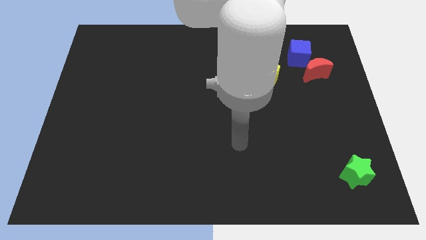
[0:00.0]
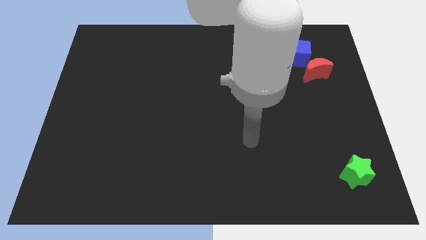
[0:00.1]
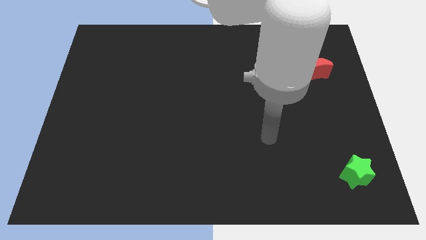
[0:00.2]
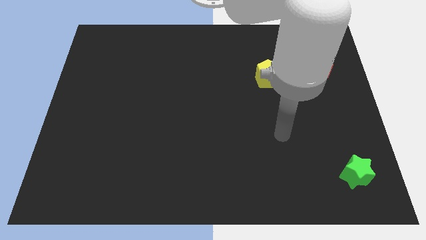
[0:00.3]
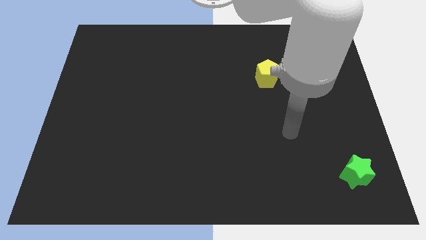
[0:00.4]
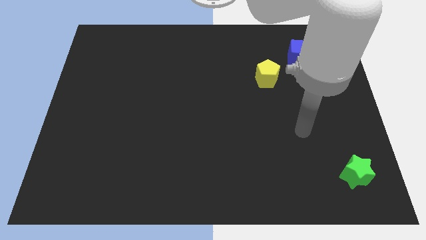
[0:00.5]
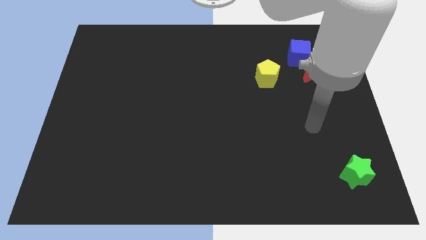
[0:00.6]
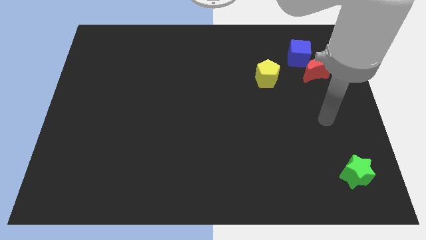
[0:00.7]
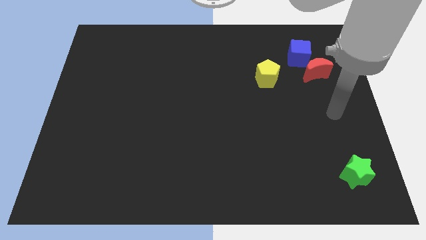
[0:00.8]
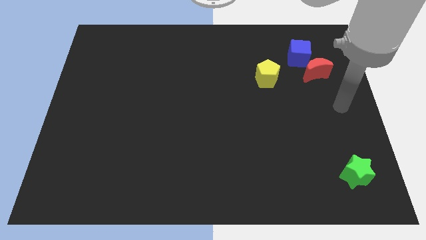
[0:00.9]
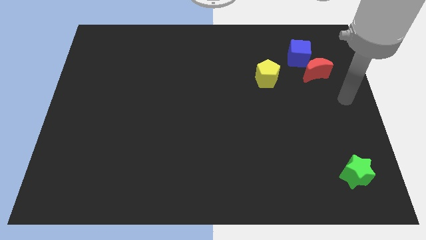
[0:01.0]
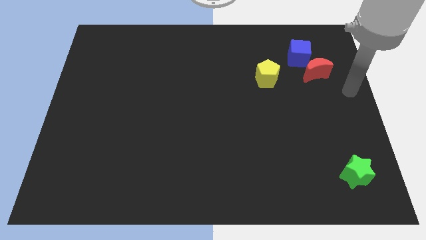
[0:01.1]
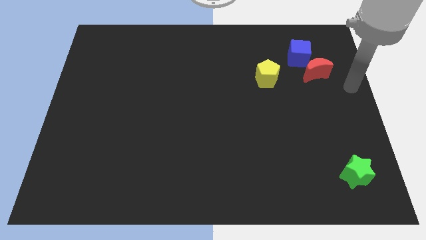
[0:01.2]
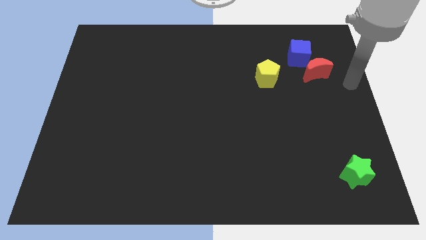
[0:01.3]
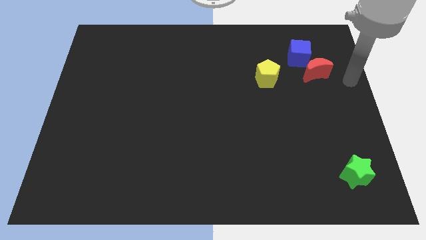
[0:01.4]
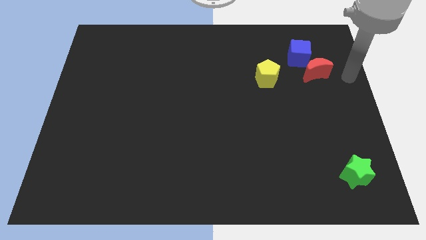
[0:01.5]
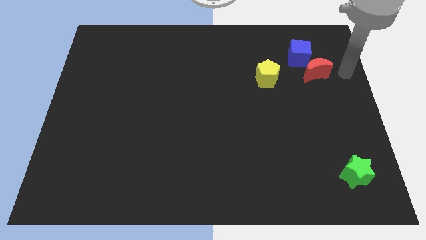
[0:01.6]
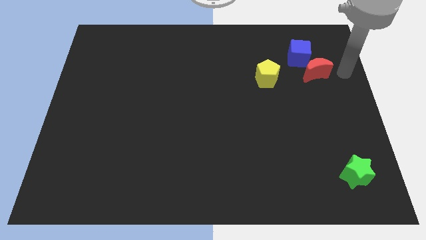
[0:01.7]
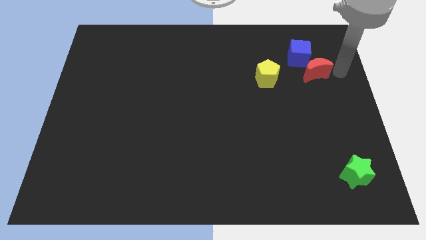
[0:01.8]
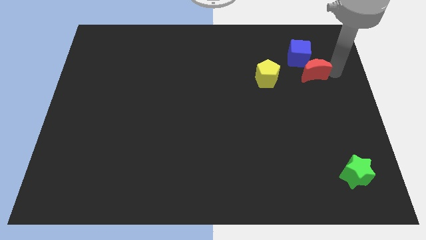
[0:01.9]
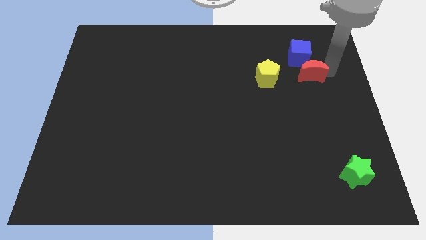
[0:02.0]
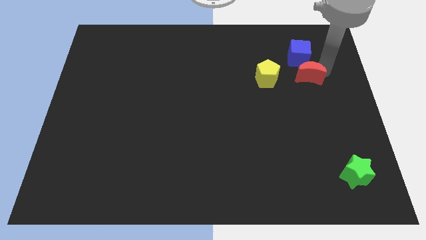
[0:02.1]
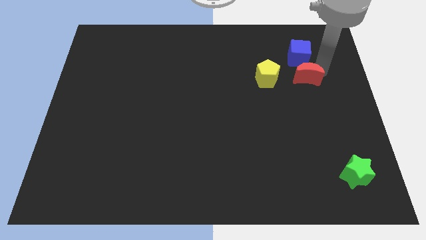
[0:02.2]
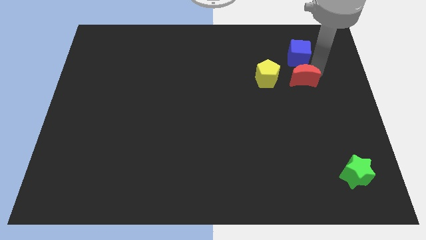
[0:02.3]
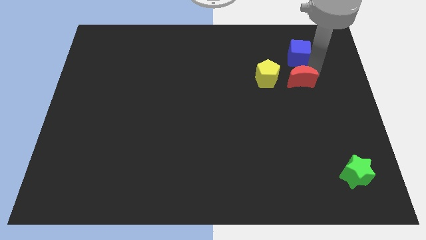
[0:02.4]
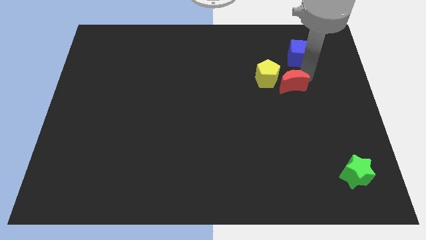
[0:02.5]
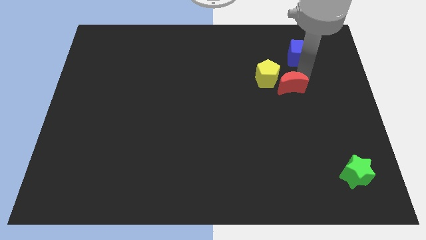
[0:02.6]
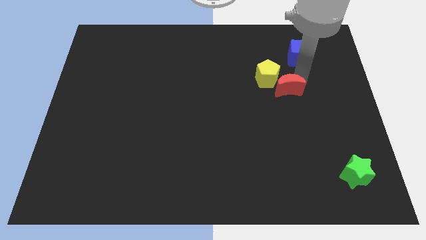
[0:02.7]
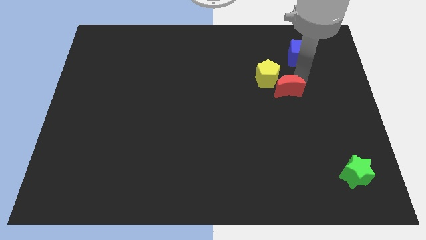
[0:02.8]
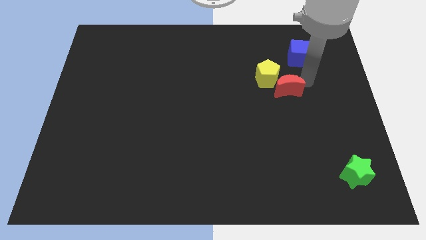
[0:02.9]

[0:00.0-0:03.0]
slide the moon to the yellow block

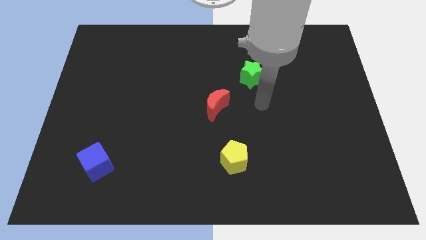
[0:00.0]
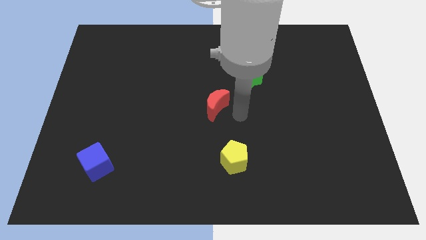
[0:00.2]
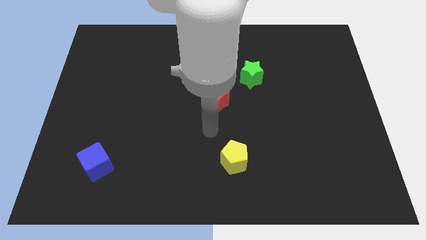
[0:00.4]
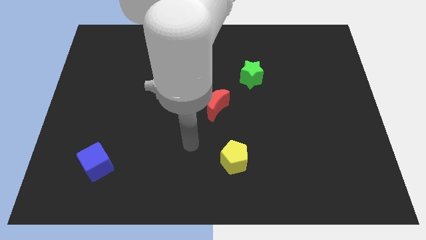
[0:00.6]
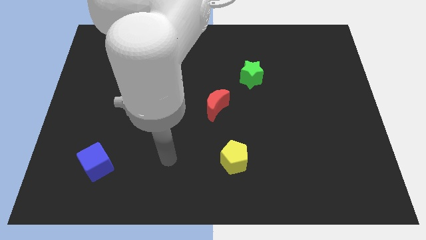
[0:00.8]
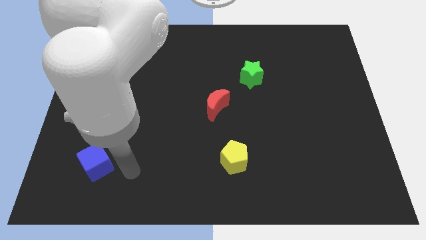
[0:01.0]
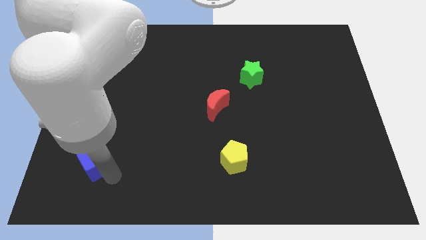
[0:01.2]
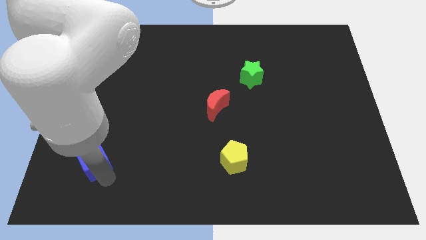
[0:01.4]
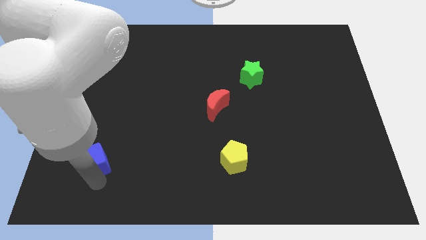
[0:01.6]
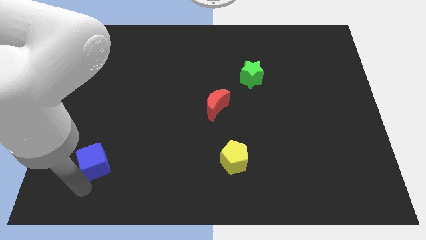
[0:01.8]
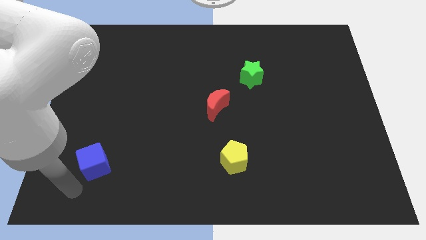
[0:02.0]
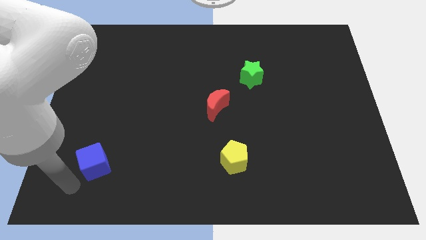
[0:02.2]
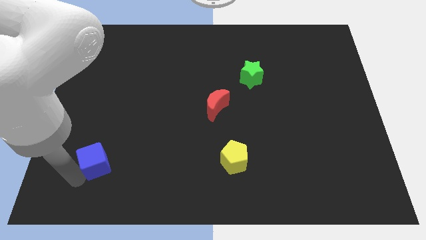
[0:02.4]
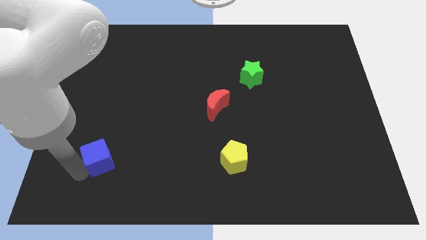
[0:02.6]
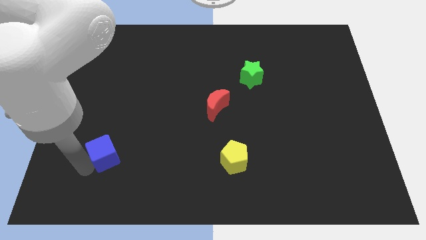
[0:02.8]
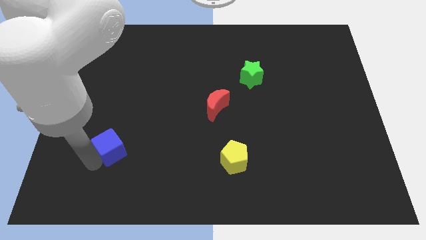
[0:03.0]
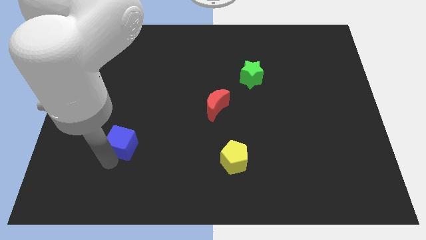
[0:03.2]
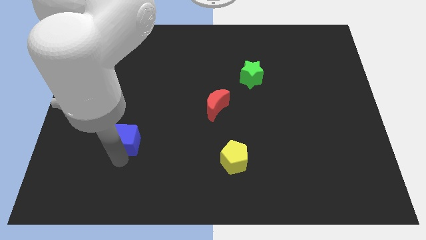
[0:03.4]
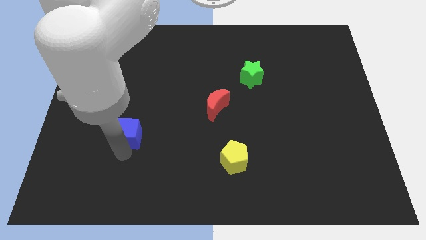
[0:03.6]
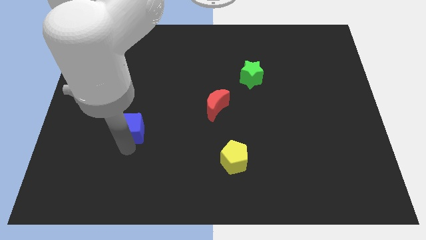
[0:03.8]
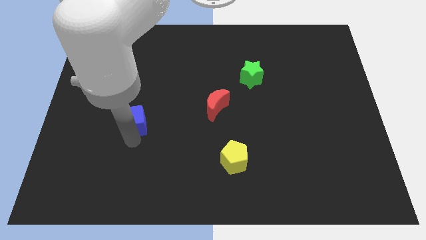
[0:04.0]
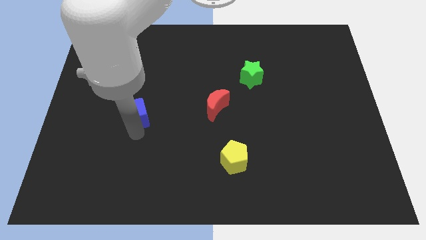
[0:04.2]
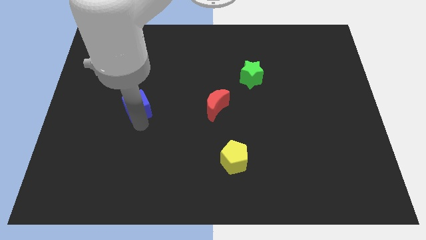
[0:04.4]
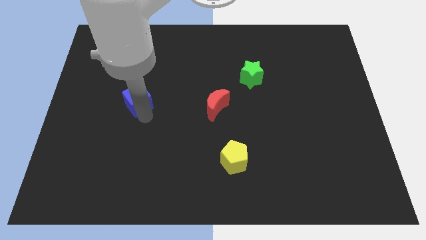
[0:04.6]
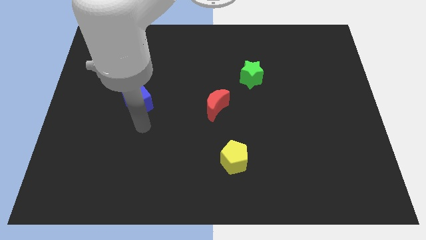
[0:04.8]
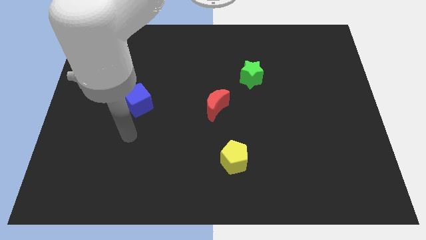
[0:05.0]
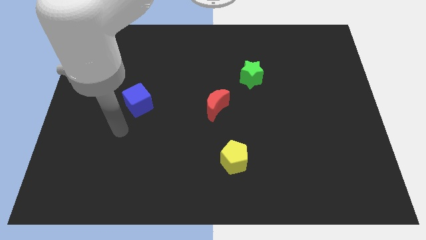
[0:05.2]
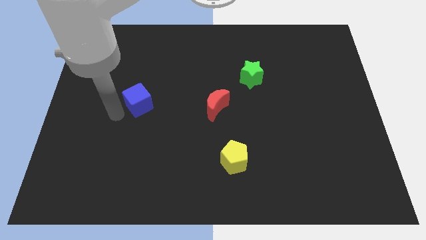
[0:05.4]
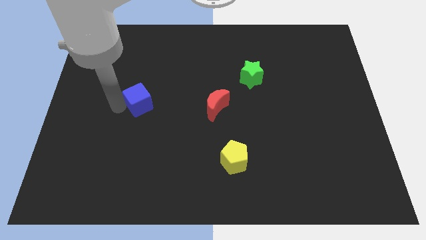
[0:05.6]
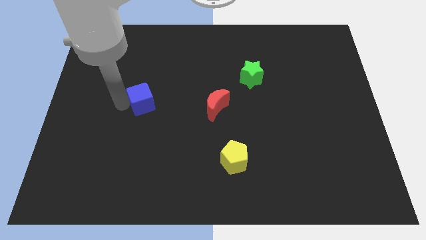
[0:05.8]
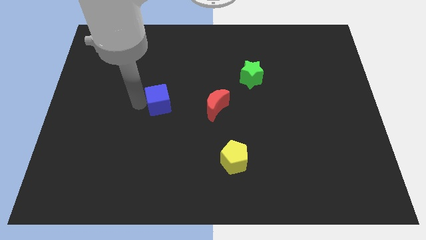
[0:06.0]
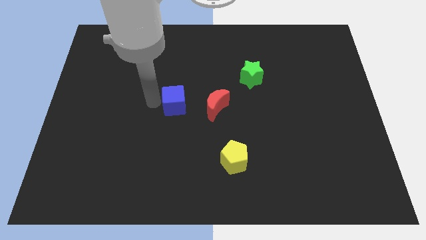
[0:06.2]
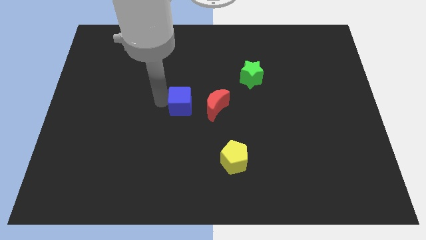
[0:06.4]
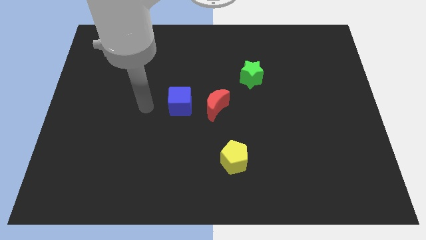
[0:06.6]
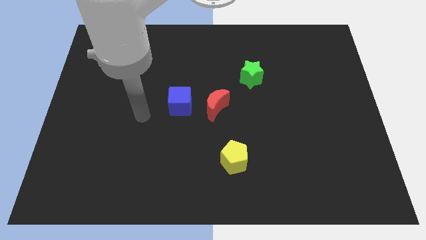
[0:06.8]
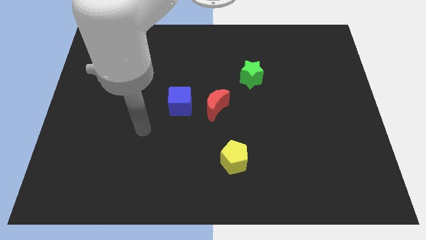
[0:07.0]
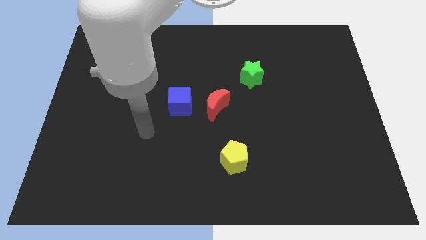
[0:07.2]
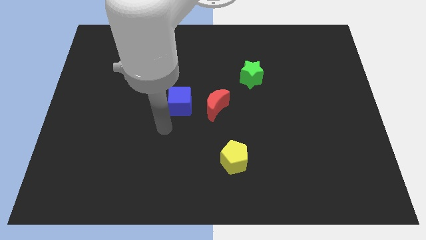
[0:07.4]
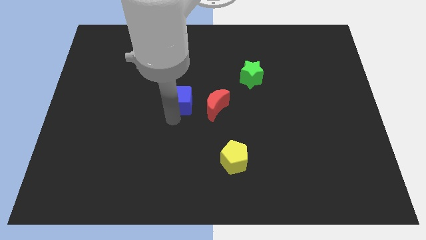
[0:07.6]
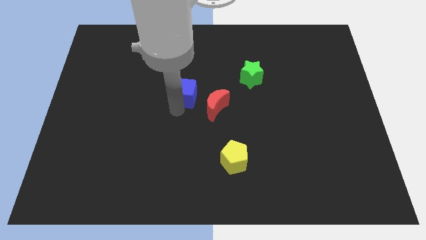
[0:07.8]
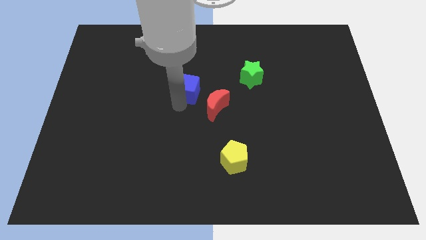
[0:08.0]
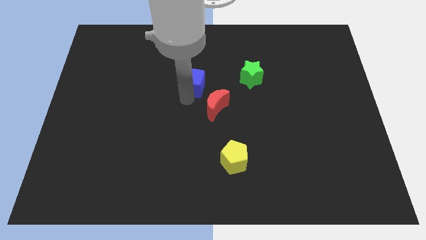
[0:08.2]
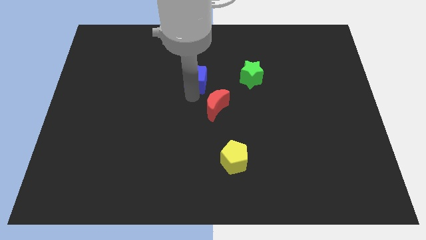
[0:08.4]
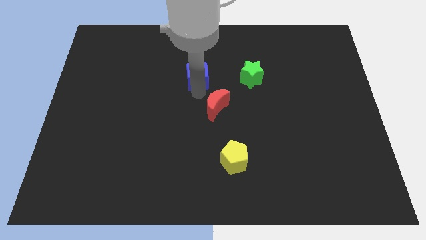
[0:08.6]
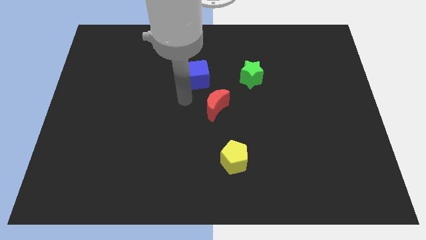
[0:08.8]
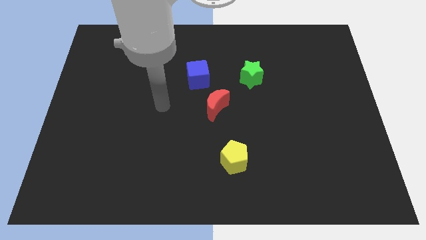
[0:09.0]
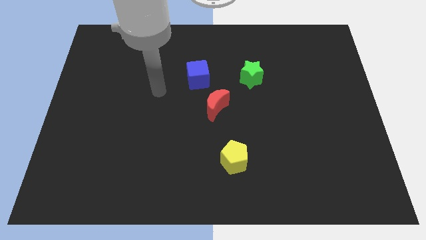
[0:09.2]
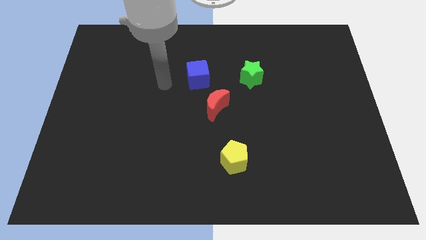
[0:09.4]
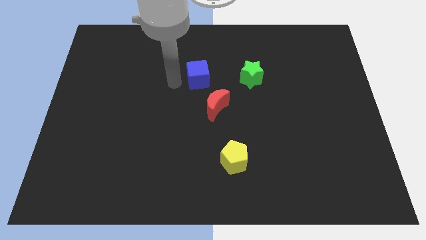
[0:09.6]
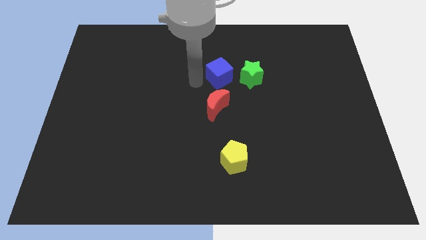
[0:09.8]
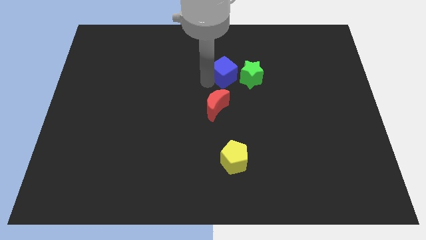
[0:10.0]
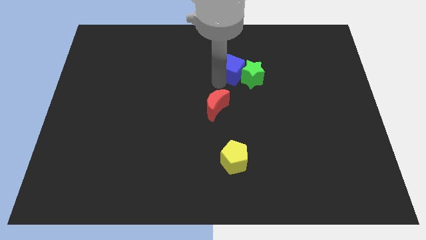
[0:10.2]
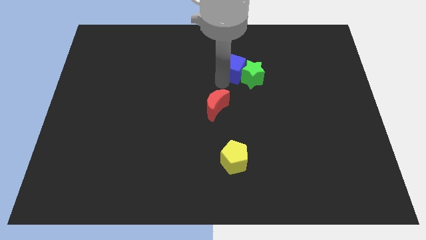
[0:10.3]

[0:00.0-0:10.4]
slide the blue block next to the green block

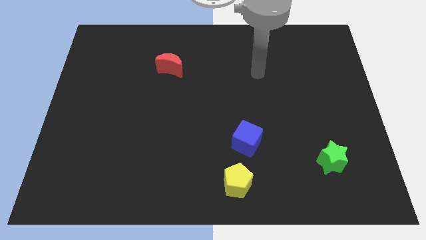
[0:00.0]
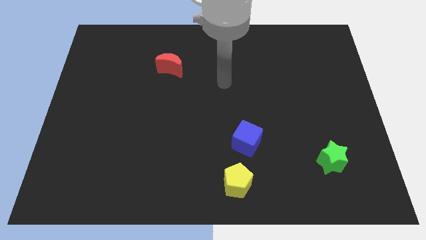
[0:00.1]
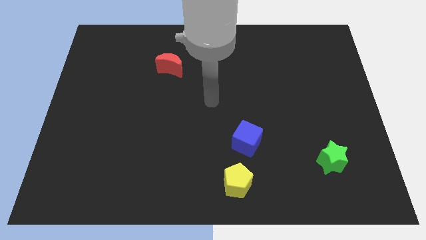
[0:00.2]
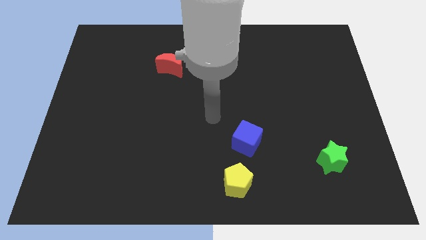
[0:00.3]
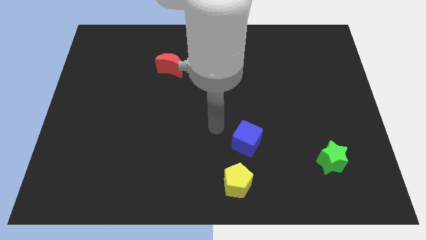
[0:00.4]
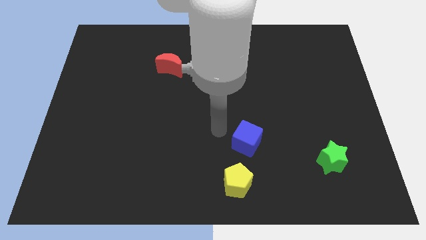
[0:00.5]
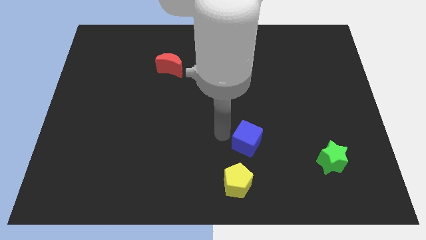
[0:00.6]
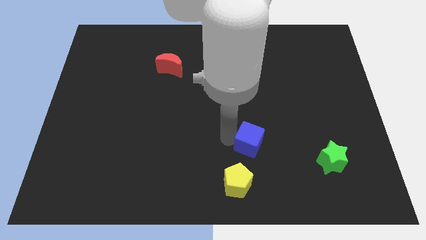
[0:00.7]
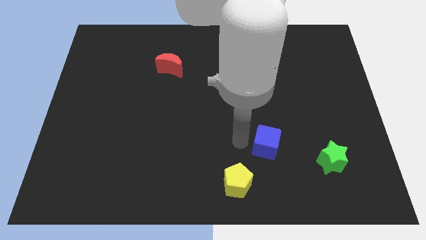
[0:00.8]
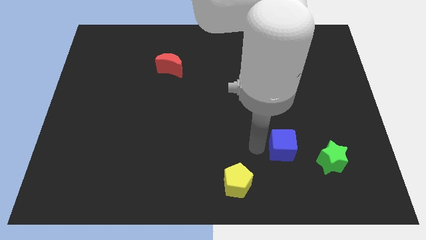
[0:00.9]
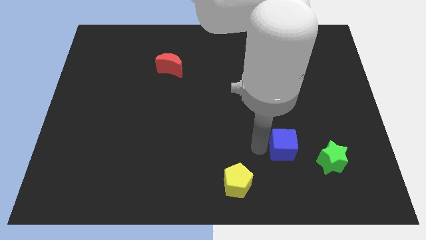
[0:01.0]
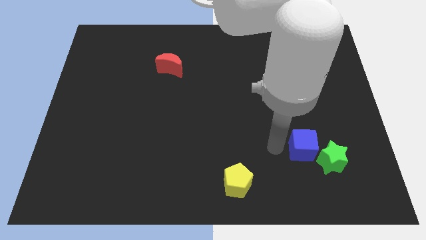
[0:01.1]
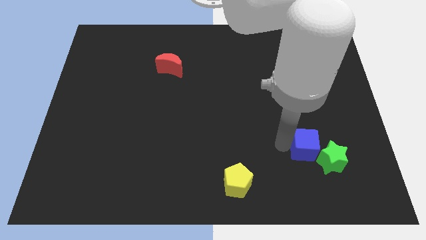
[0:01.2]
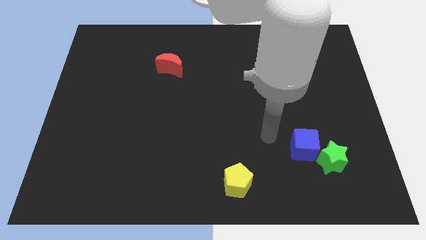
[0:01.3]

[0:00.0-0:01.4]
put the cube towards the green star
